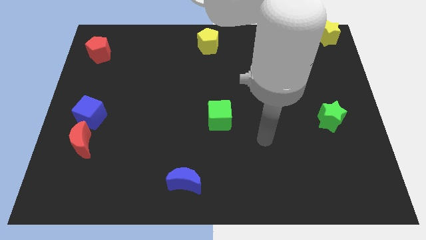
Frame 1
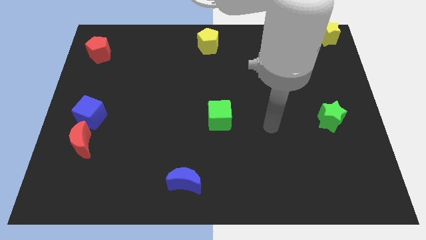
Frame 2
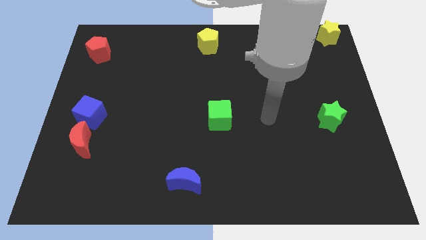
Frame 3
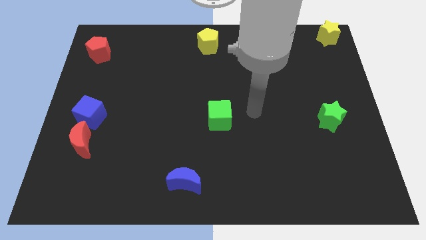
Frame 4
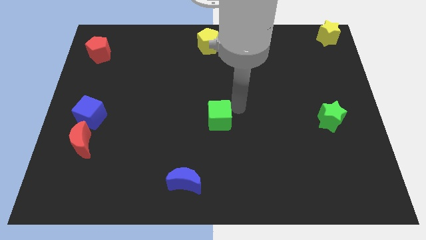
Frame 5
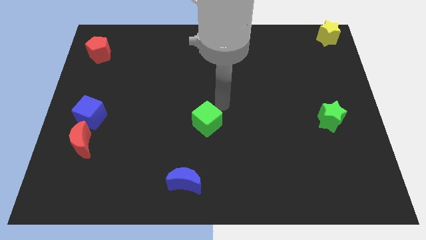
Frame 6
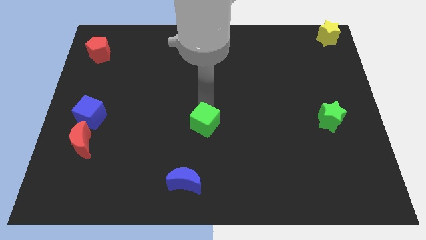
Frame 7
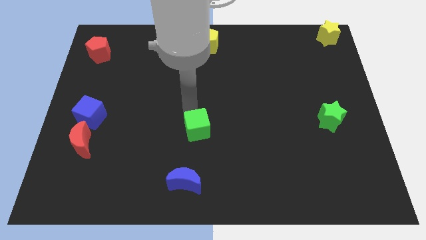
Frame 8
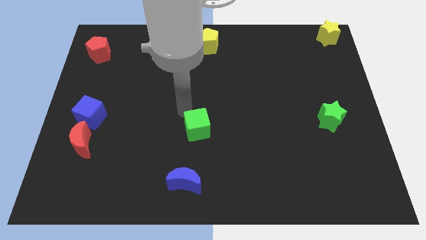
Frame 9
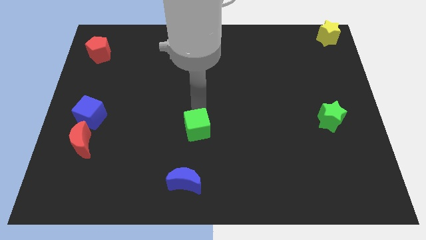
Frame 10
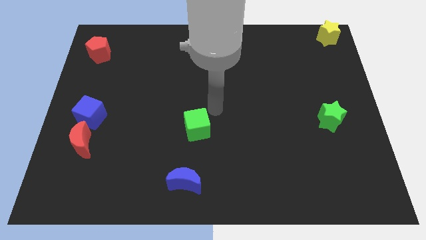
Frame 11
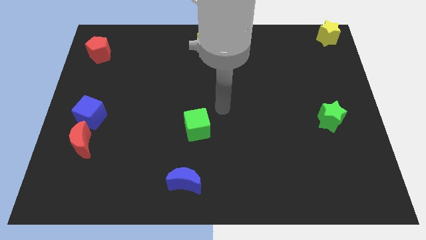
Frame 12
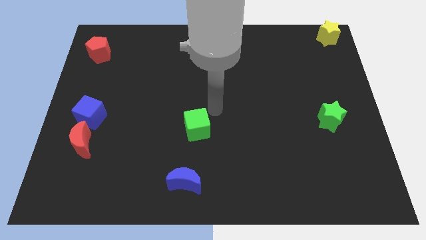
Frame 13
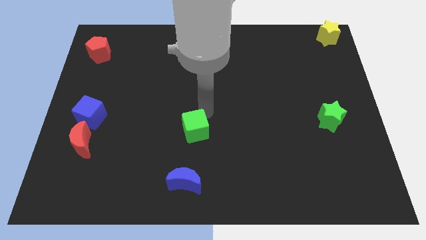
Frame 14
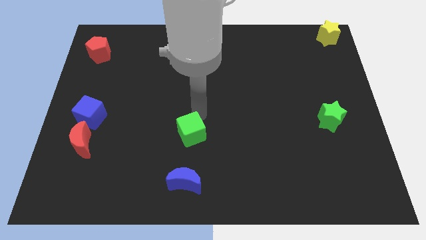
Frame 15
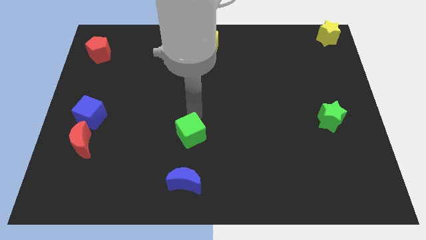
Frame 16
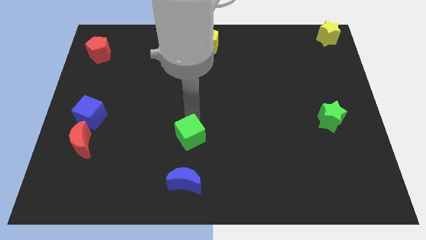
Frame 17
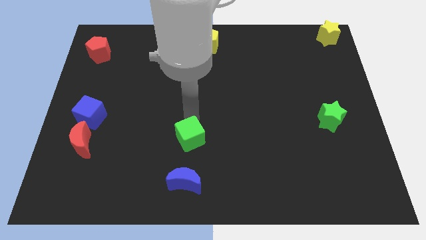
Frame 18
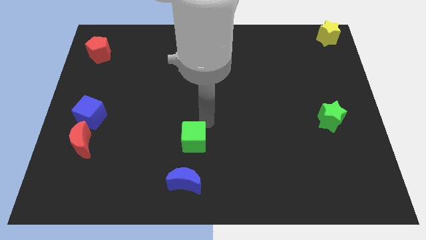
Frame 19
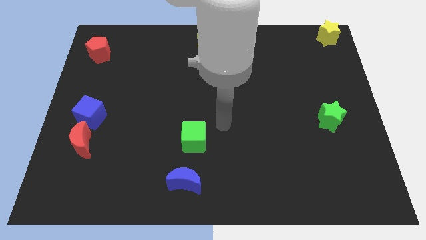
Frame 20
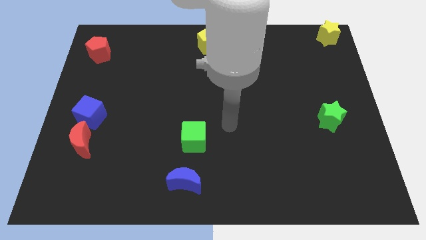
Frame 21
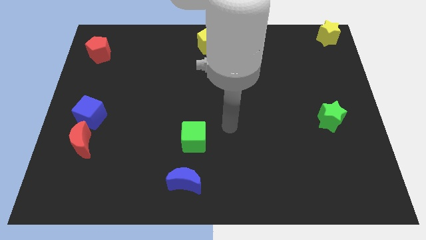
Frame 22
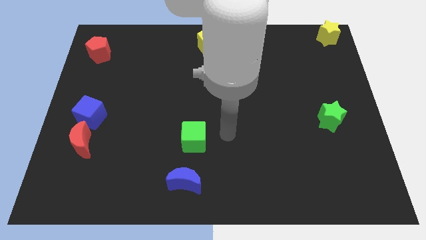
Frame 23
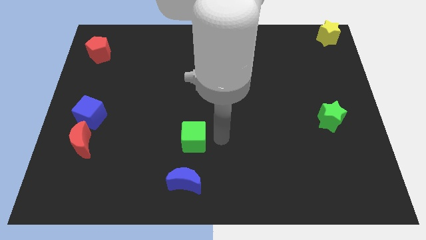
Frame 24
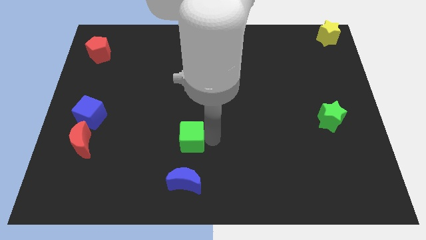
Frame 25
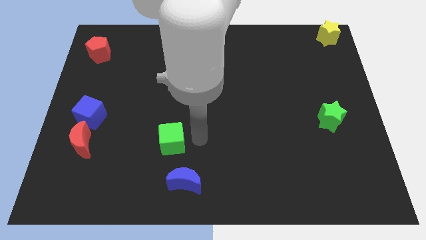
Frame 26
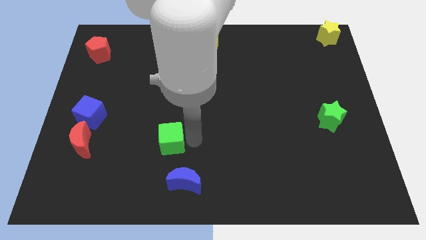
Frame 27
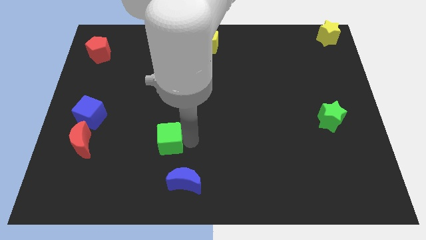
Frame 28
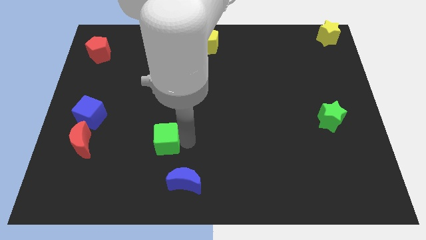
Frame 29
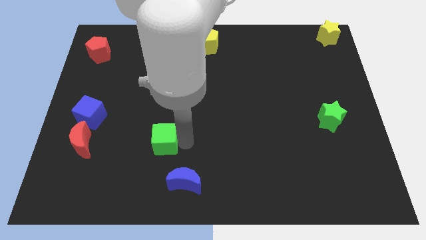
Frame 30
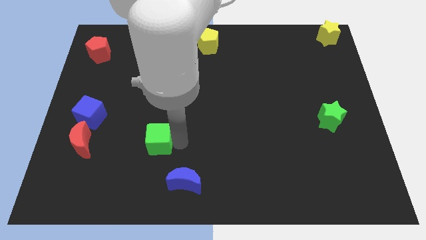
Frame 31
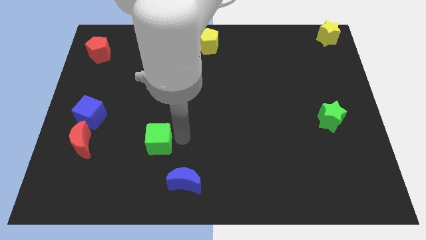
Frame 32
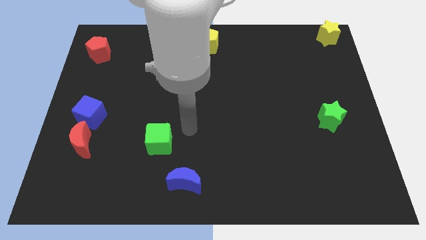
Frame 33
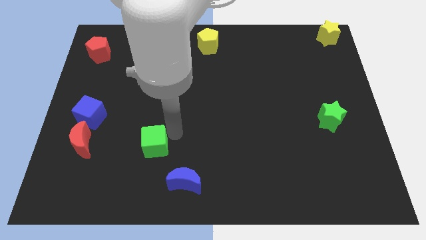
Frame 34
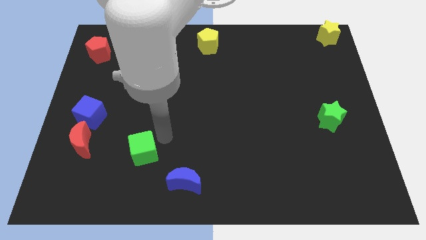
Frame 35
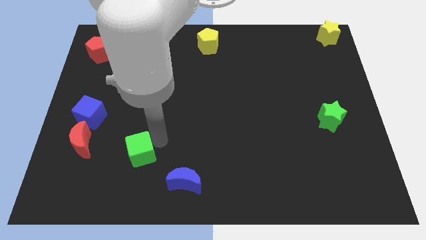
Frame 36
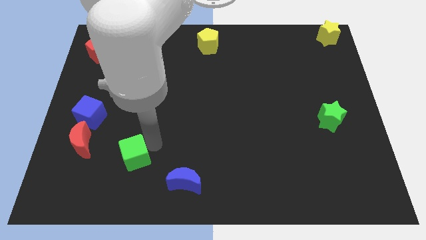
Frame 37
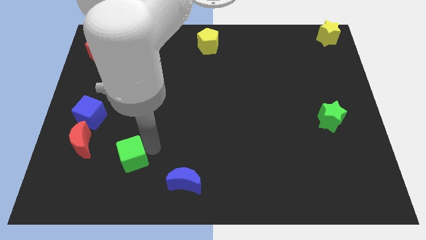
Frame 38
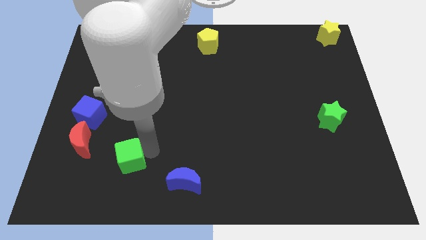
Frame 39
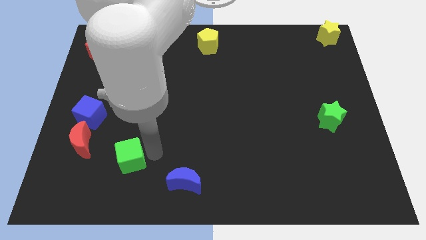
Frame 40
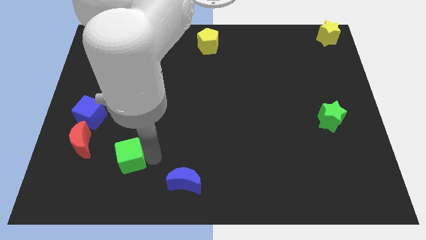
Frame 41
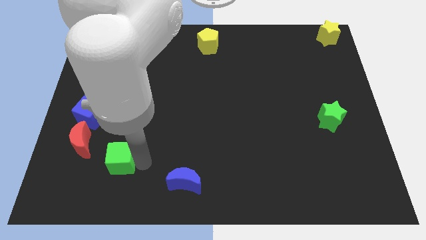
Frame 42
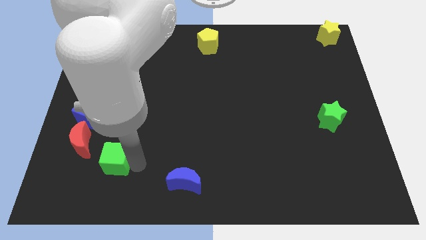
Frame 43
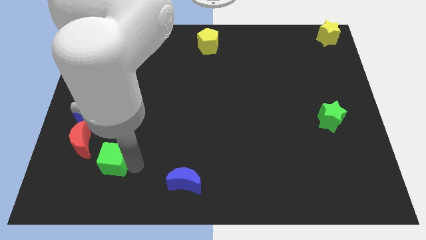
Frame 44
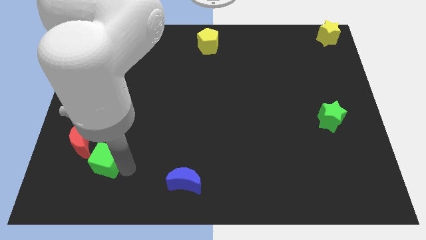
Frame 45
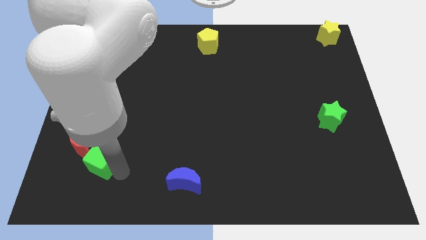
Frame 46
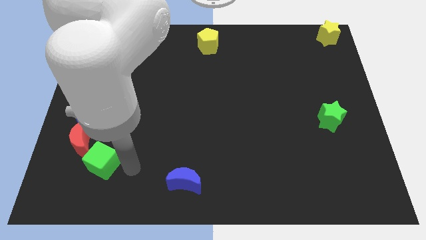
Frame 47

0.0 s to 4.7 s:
place the green cube below the red moon

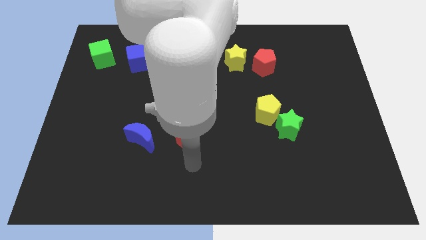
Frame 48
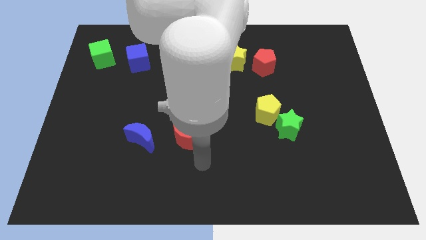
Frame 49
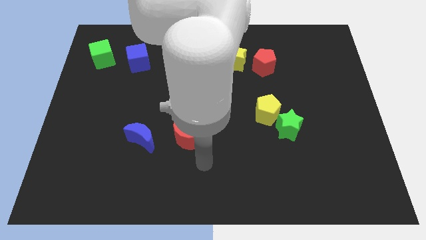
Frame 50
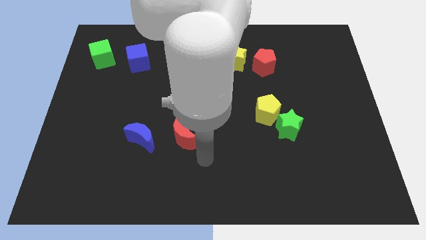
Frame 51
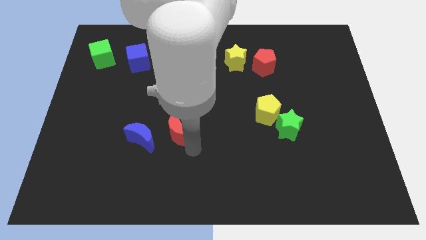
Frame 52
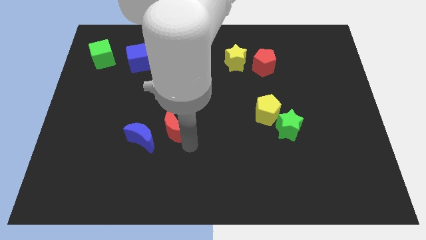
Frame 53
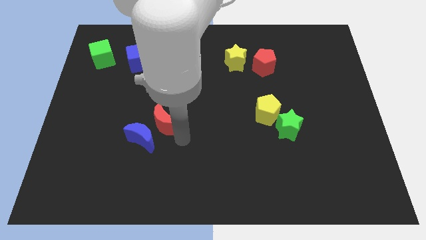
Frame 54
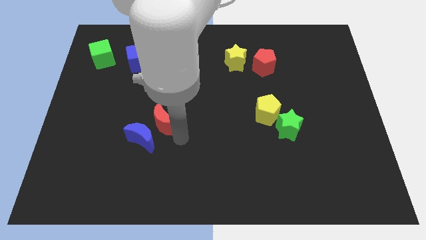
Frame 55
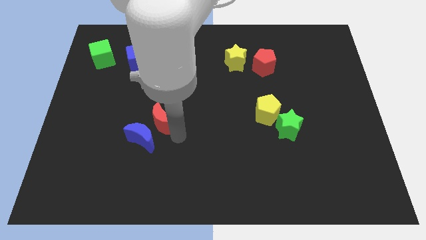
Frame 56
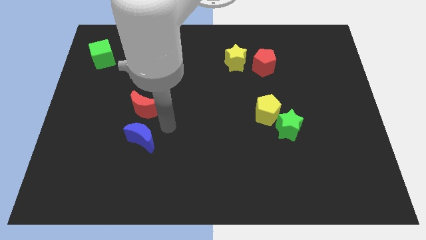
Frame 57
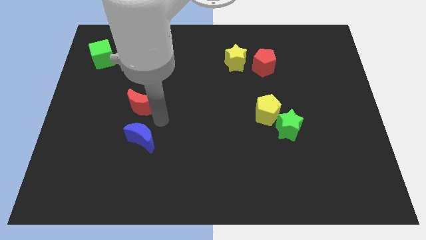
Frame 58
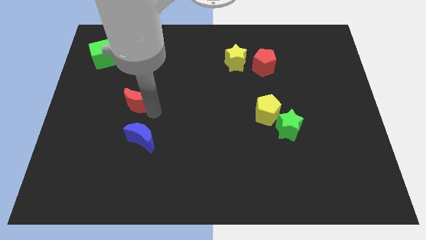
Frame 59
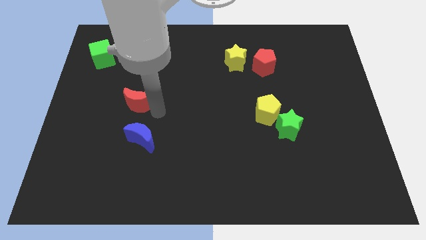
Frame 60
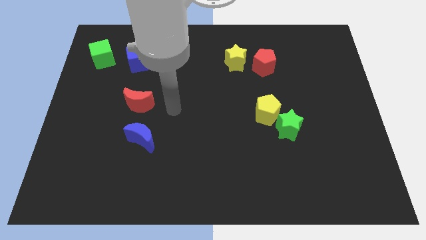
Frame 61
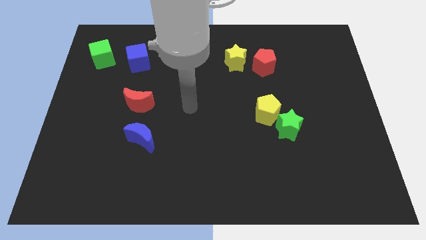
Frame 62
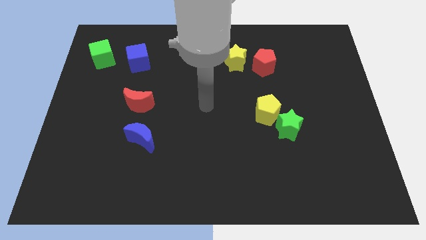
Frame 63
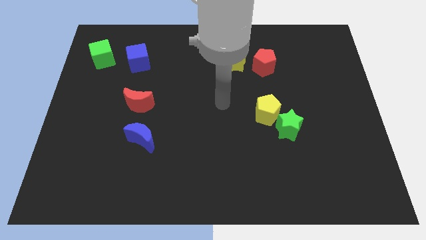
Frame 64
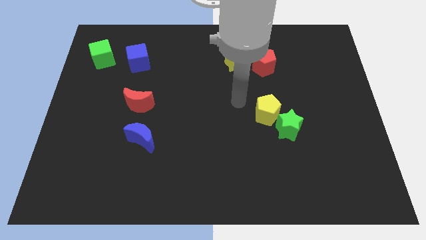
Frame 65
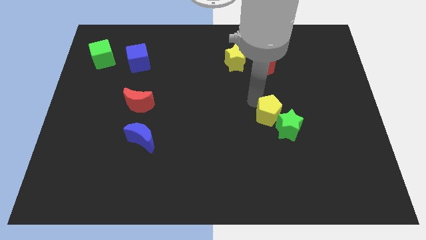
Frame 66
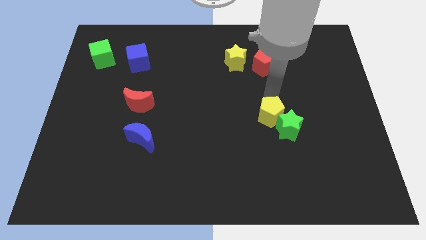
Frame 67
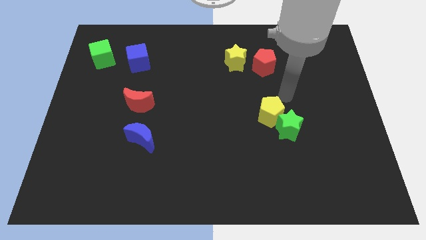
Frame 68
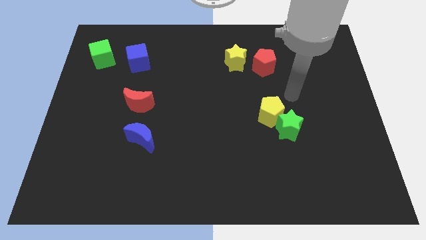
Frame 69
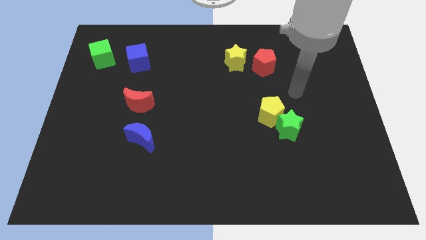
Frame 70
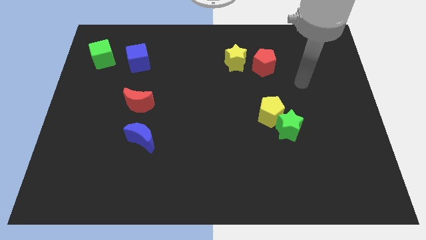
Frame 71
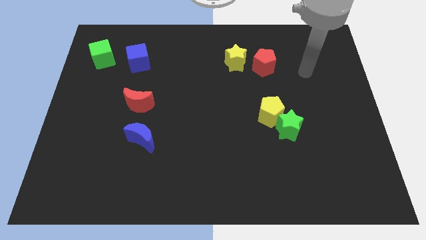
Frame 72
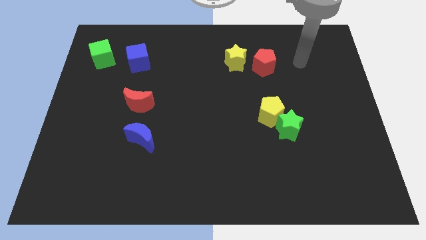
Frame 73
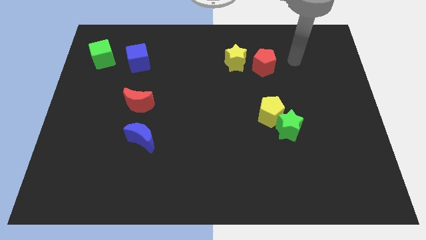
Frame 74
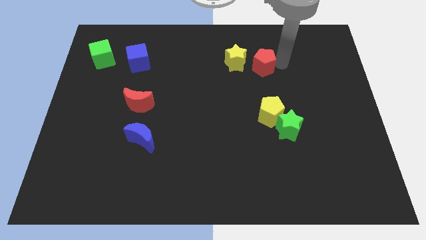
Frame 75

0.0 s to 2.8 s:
move the red crescent above the blue crescent

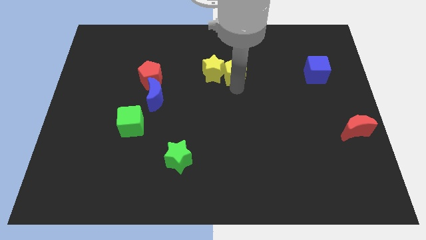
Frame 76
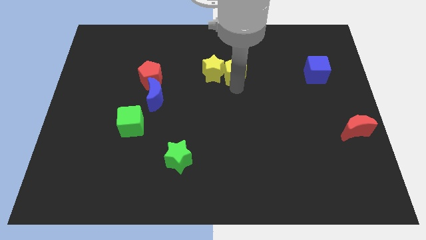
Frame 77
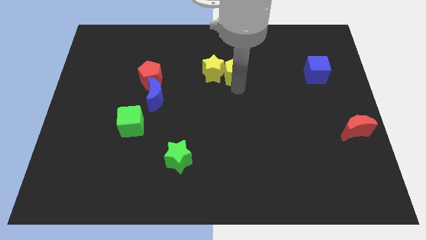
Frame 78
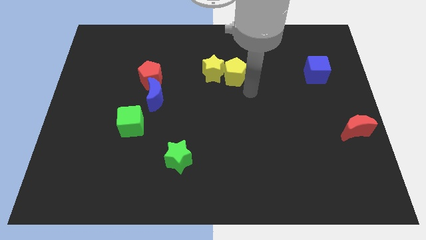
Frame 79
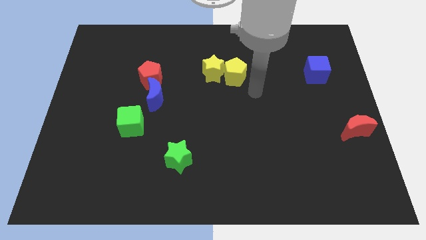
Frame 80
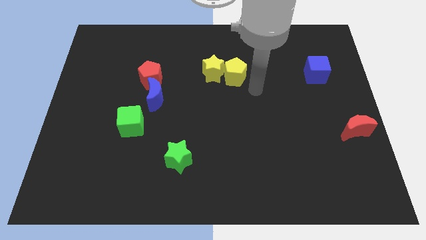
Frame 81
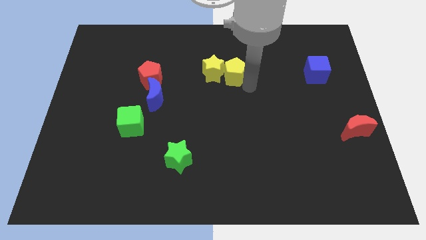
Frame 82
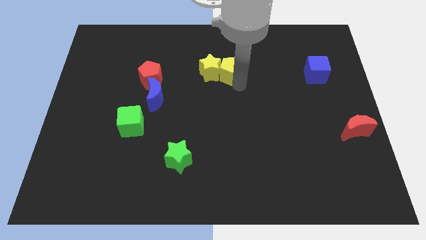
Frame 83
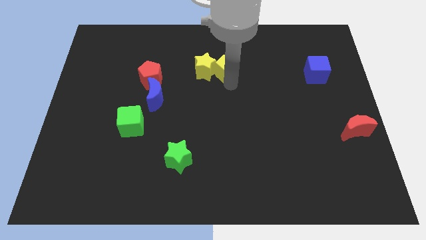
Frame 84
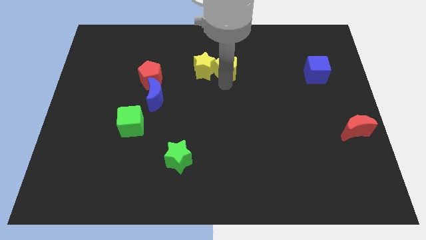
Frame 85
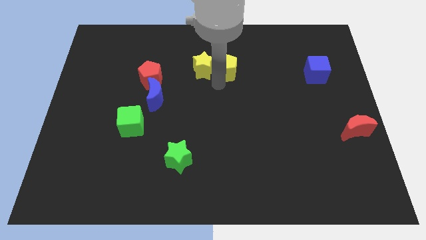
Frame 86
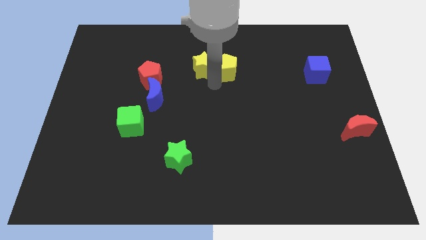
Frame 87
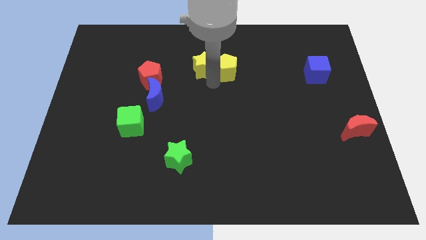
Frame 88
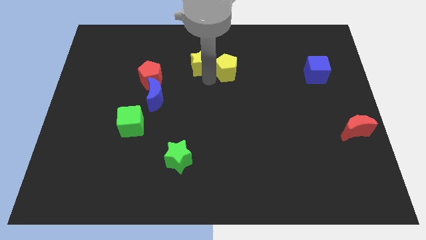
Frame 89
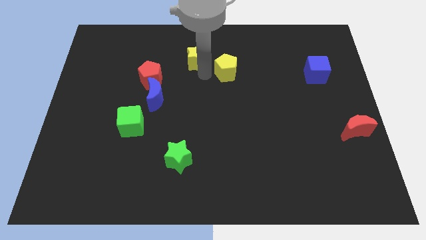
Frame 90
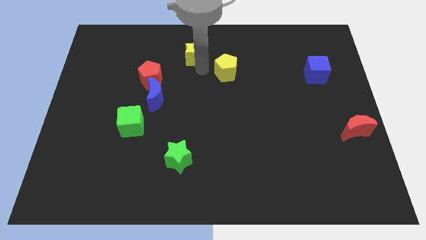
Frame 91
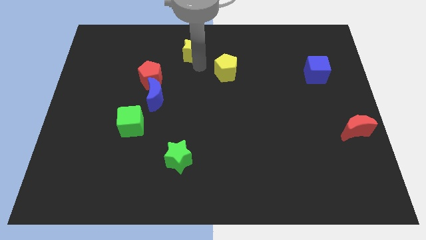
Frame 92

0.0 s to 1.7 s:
separate the yellow star from the yellow pentagon
